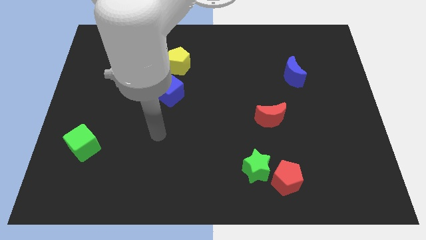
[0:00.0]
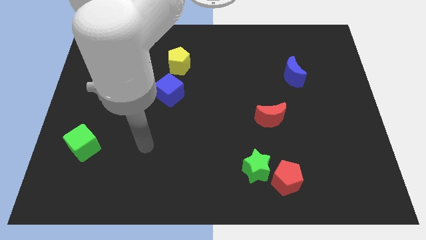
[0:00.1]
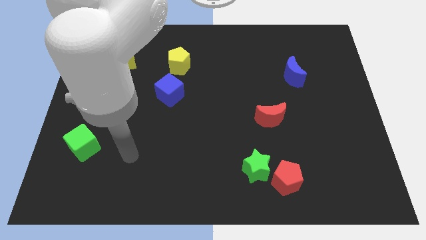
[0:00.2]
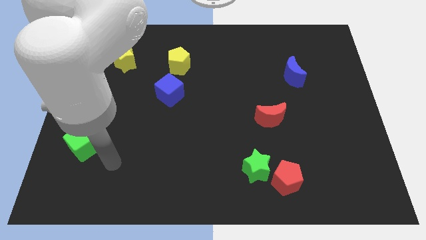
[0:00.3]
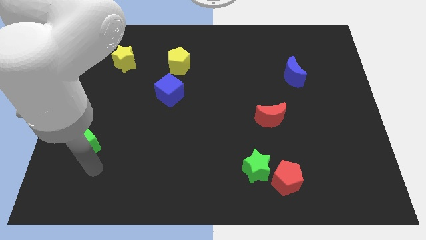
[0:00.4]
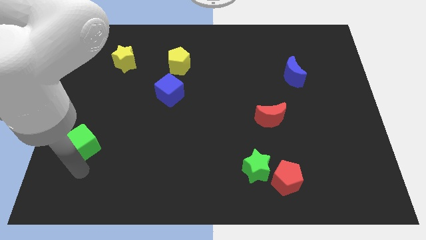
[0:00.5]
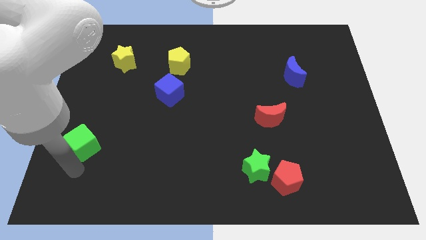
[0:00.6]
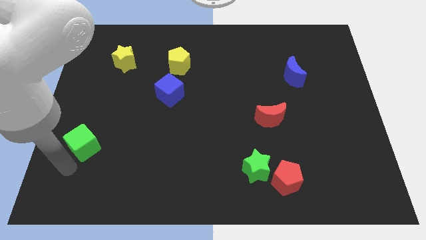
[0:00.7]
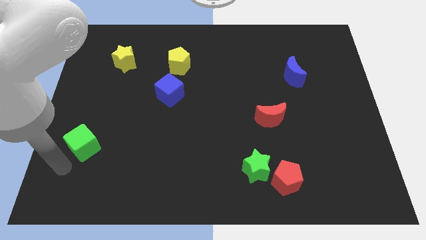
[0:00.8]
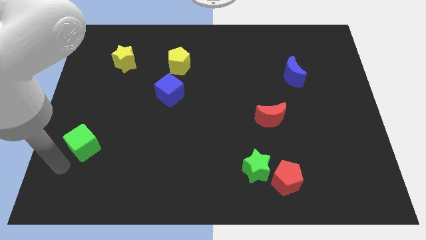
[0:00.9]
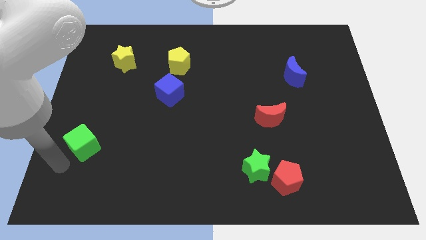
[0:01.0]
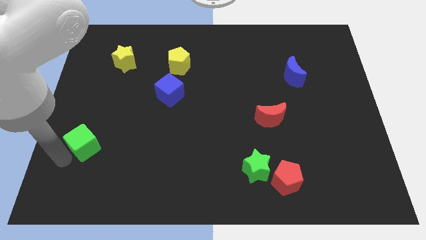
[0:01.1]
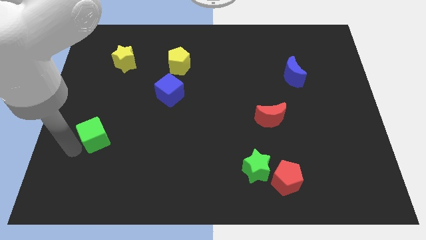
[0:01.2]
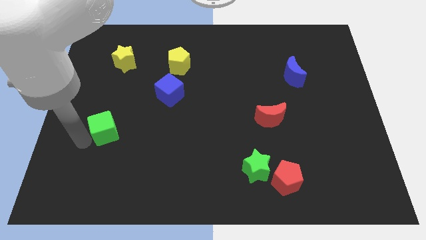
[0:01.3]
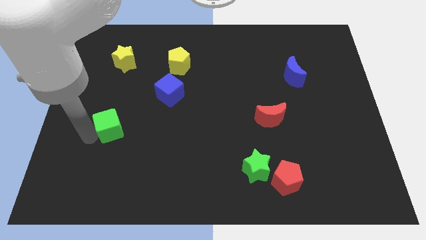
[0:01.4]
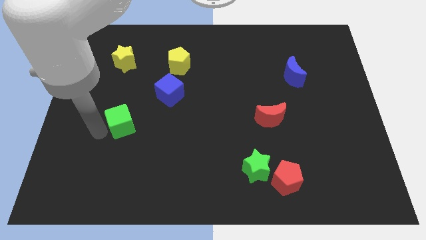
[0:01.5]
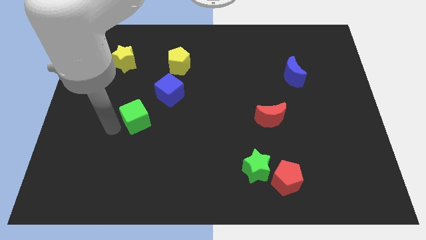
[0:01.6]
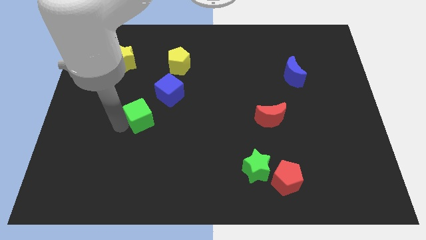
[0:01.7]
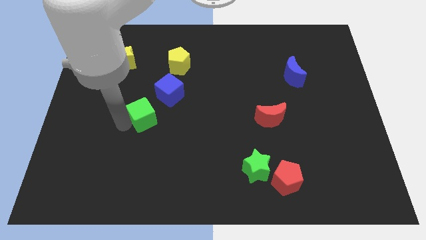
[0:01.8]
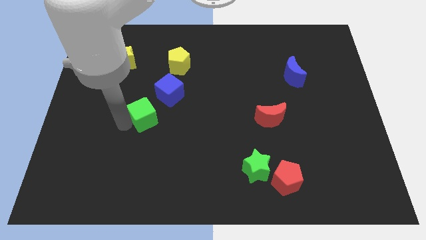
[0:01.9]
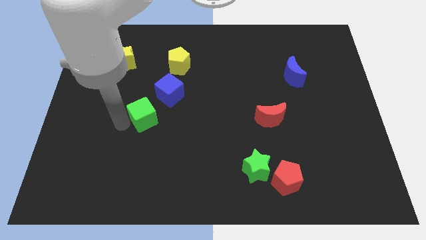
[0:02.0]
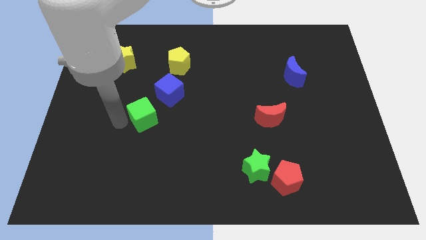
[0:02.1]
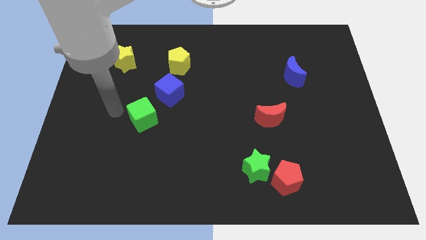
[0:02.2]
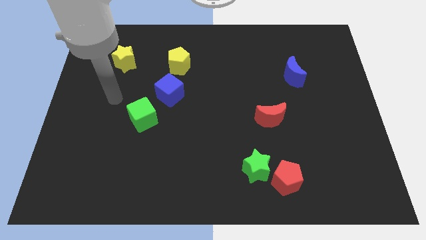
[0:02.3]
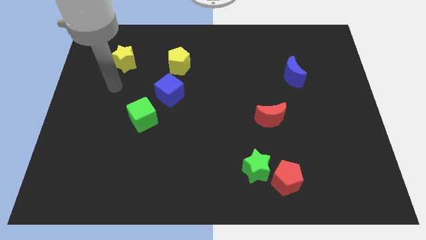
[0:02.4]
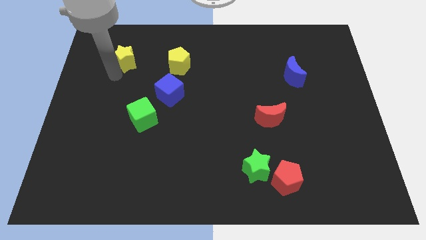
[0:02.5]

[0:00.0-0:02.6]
push the green cube below the blue cube

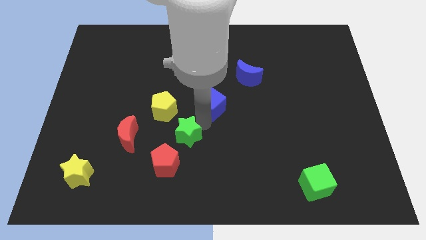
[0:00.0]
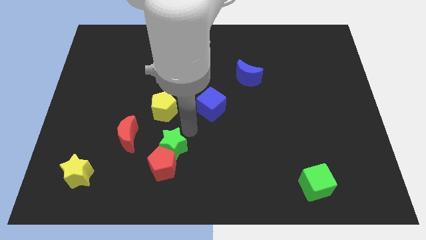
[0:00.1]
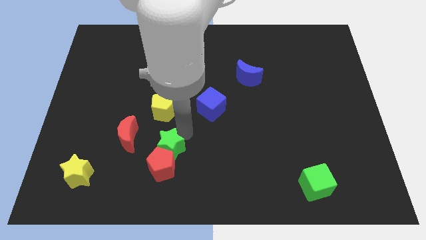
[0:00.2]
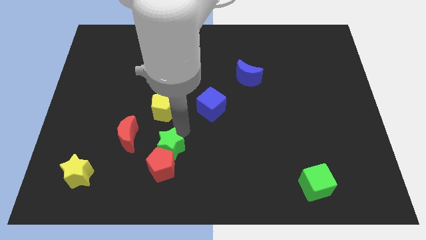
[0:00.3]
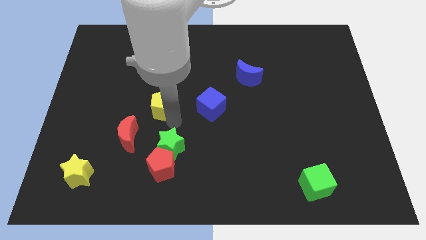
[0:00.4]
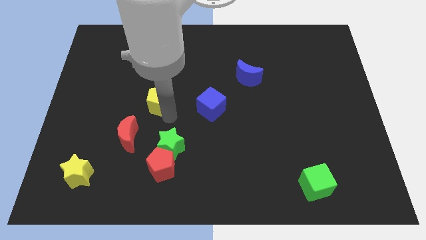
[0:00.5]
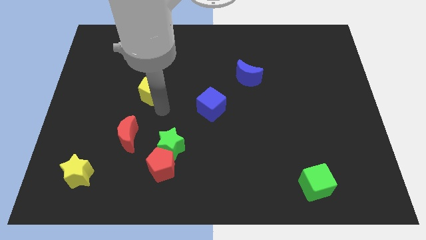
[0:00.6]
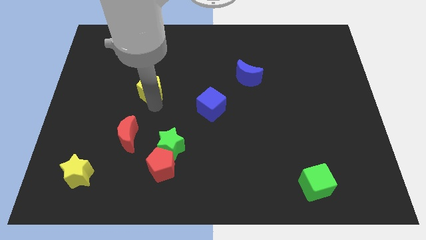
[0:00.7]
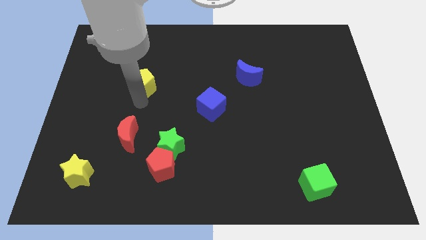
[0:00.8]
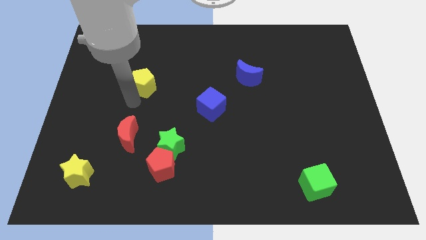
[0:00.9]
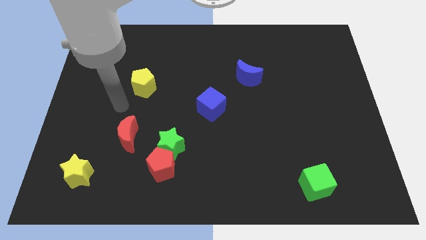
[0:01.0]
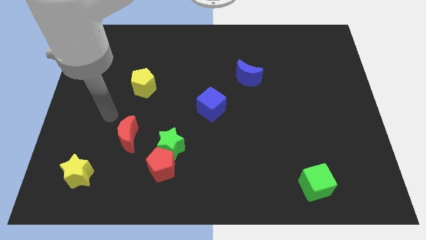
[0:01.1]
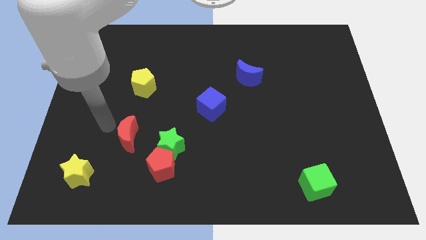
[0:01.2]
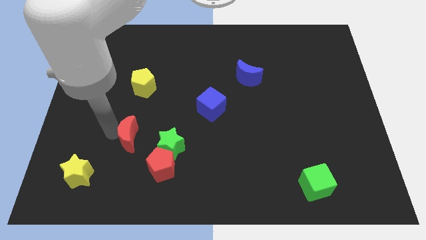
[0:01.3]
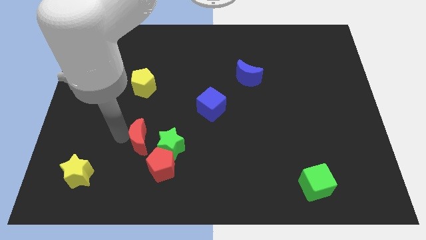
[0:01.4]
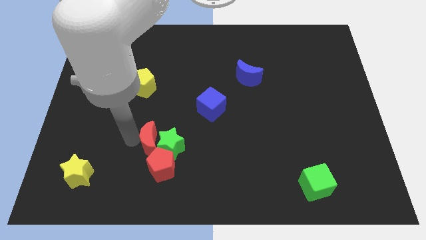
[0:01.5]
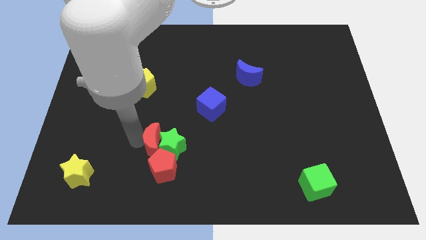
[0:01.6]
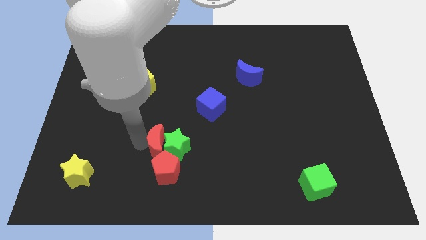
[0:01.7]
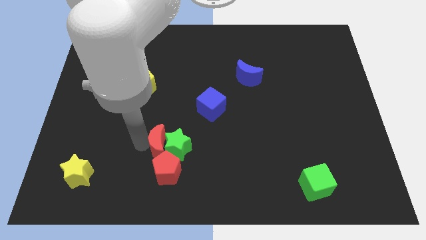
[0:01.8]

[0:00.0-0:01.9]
push the red crescent into the green star

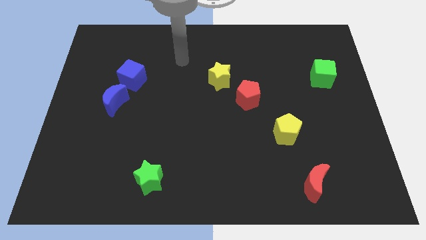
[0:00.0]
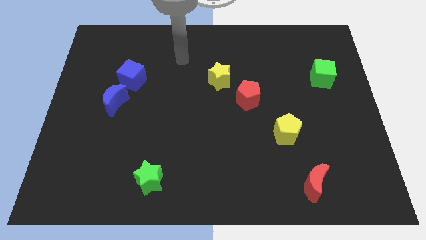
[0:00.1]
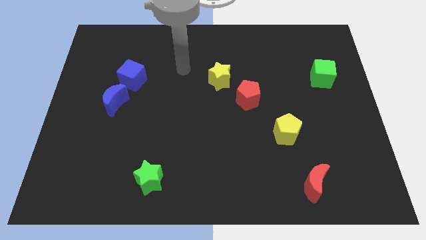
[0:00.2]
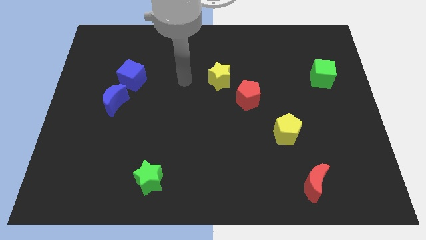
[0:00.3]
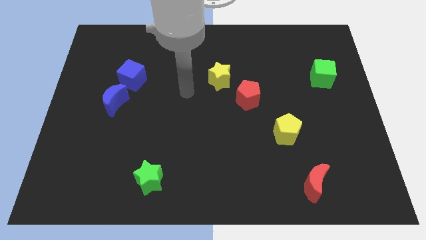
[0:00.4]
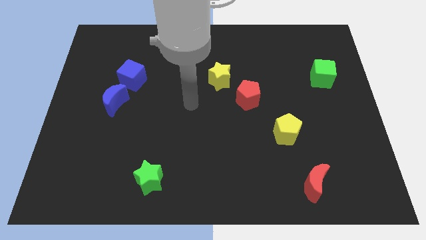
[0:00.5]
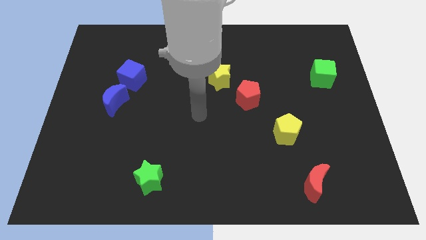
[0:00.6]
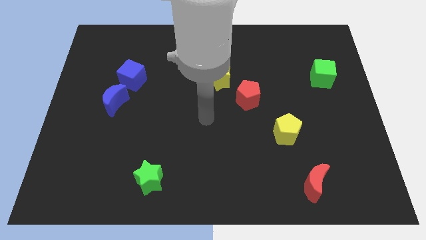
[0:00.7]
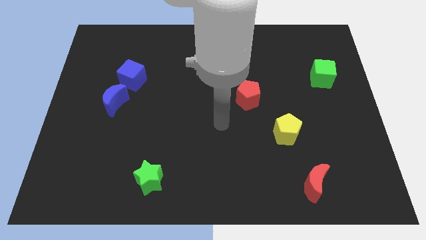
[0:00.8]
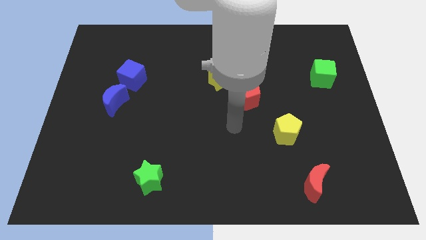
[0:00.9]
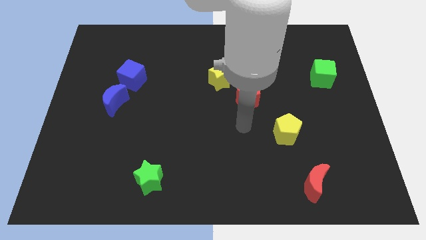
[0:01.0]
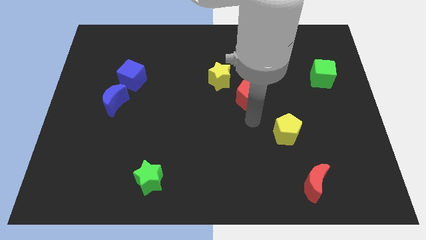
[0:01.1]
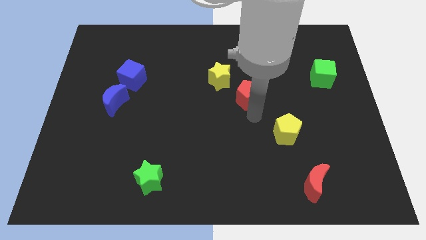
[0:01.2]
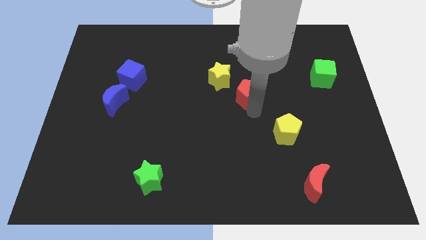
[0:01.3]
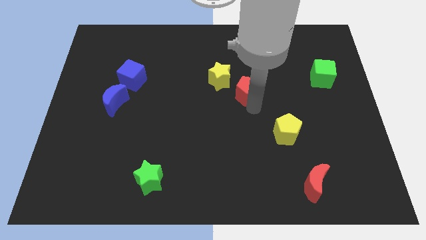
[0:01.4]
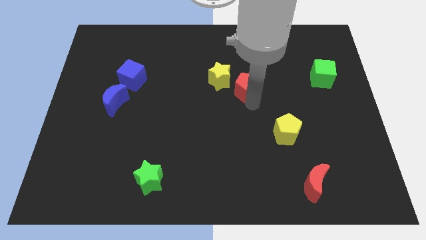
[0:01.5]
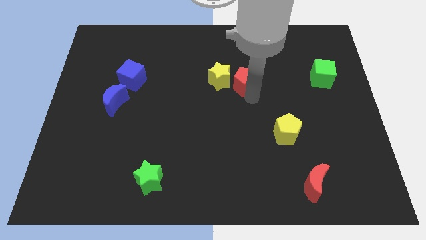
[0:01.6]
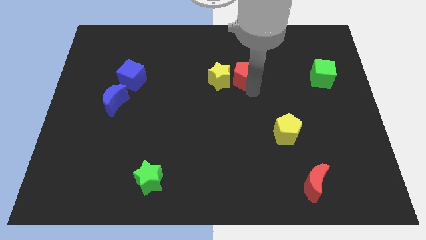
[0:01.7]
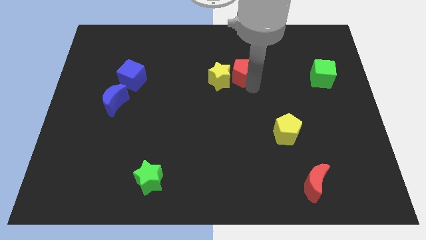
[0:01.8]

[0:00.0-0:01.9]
move the red pentagon close to the right side of the yellow star

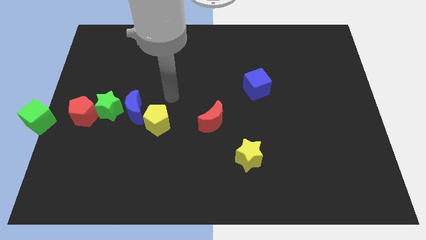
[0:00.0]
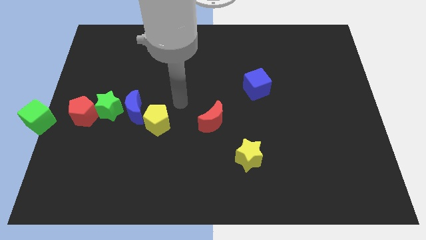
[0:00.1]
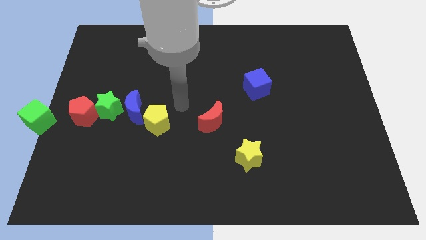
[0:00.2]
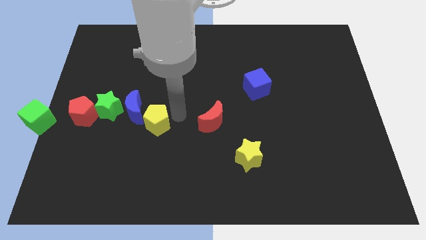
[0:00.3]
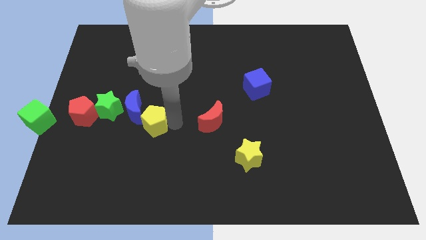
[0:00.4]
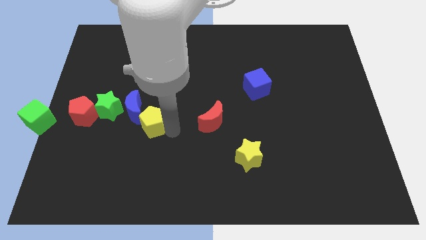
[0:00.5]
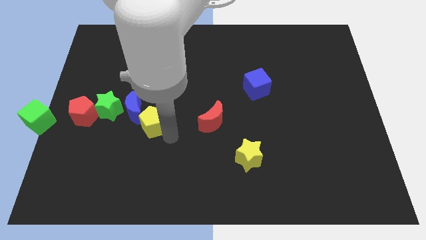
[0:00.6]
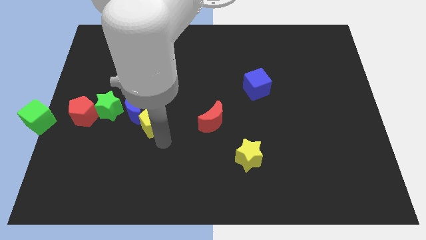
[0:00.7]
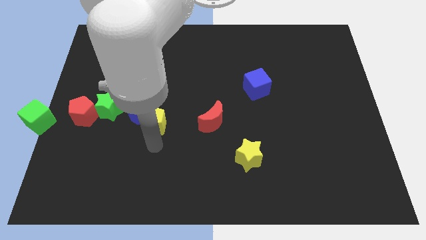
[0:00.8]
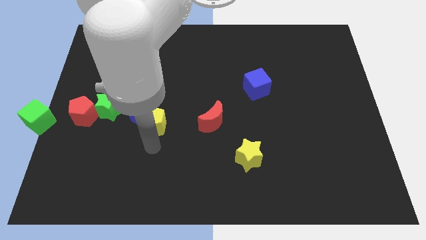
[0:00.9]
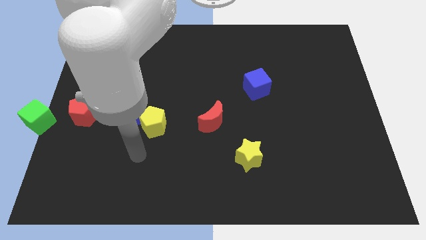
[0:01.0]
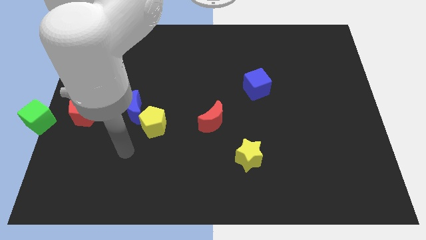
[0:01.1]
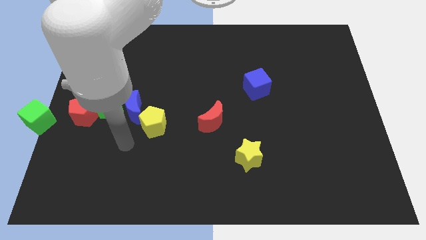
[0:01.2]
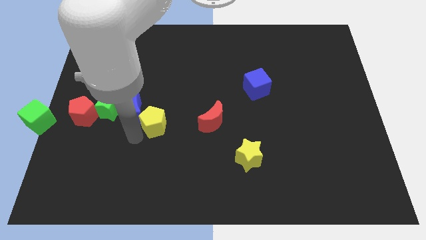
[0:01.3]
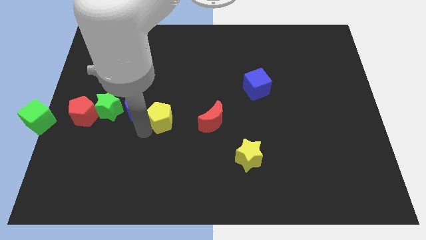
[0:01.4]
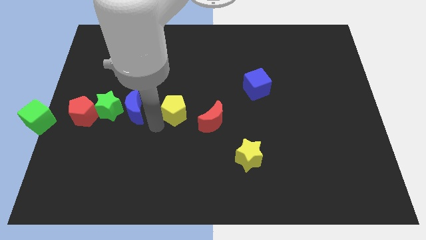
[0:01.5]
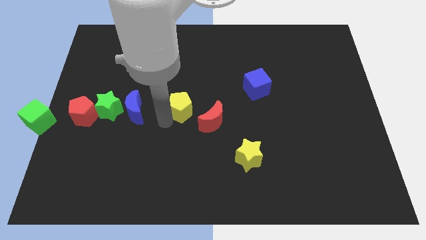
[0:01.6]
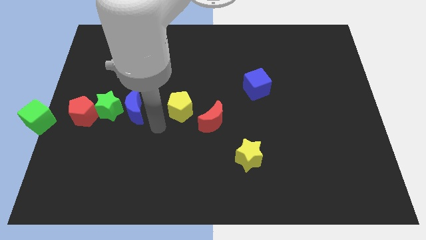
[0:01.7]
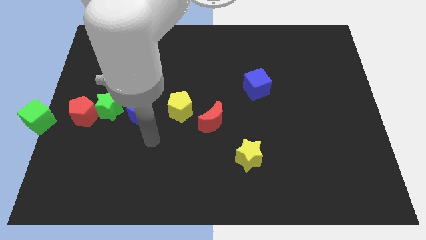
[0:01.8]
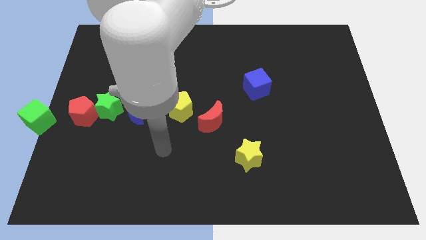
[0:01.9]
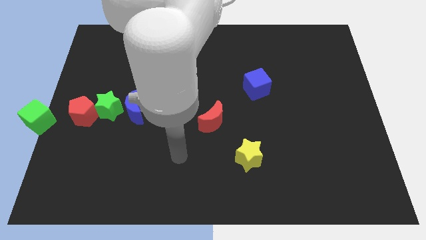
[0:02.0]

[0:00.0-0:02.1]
move the yellow pentagon slightly to the center of the board

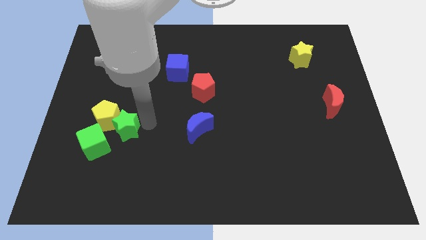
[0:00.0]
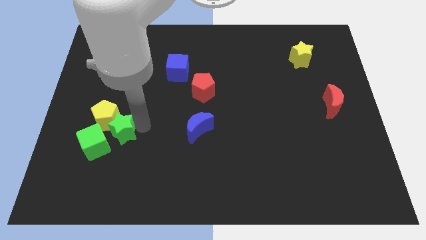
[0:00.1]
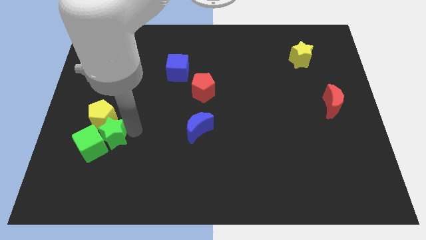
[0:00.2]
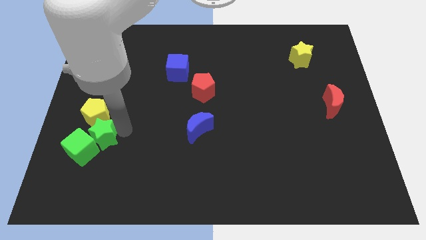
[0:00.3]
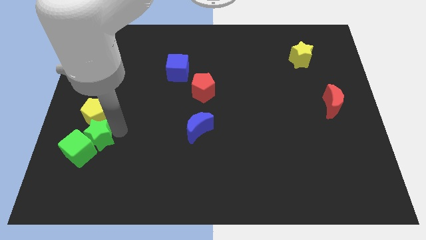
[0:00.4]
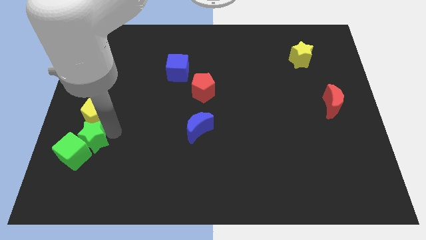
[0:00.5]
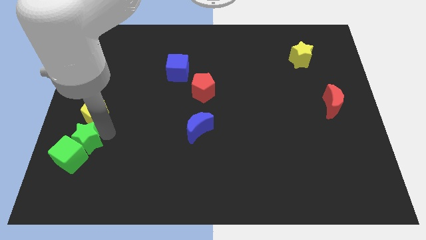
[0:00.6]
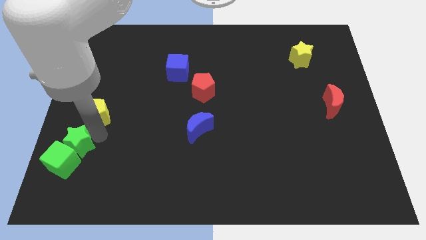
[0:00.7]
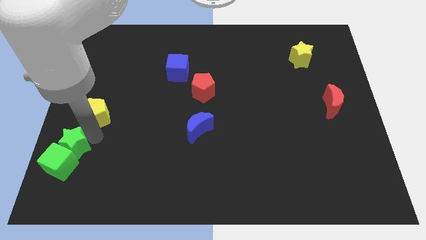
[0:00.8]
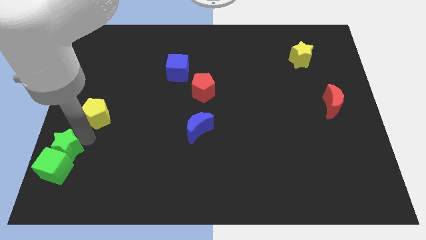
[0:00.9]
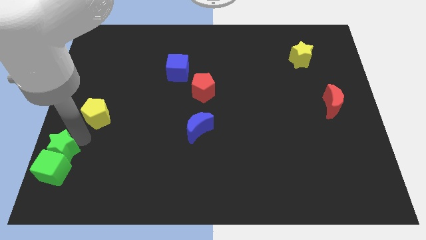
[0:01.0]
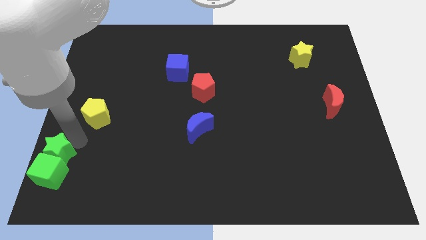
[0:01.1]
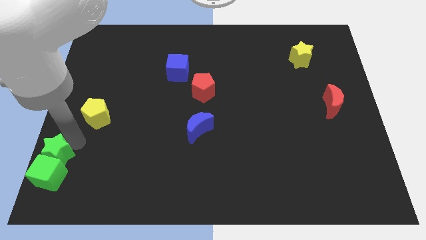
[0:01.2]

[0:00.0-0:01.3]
move the green star above the green cube
